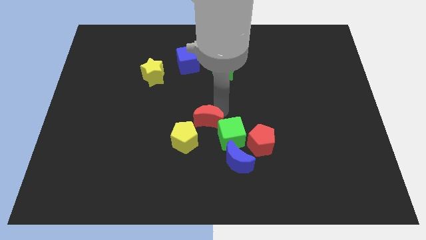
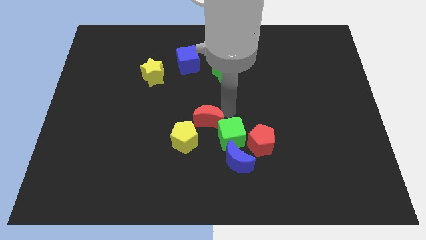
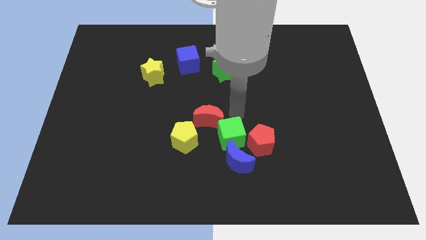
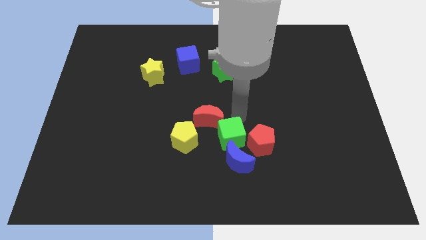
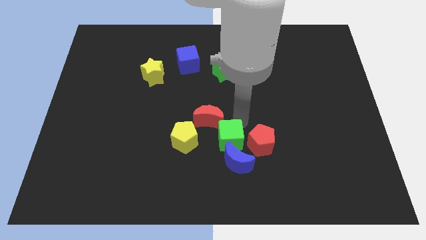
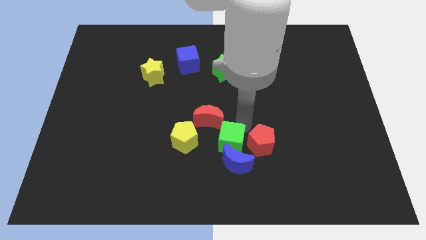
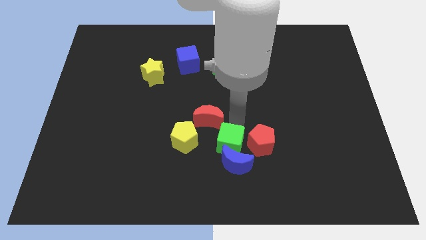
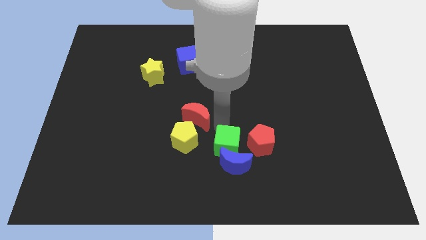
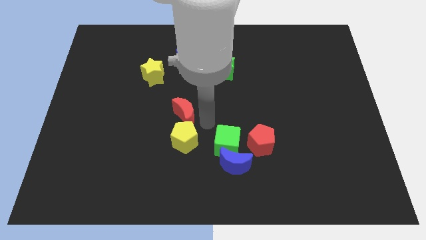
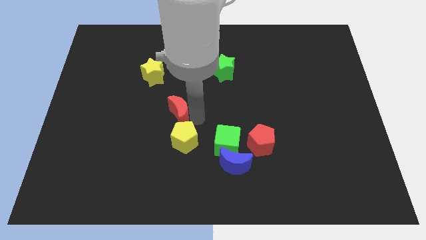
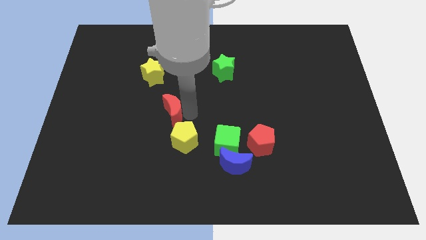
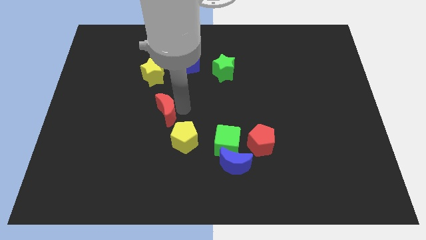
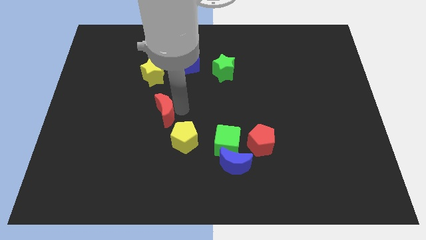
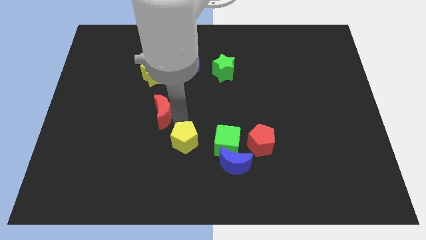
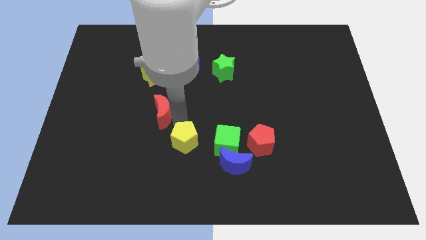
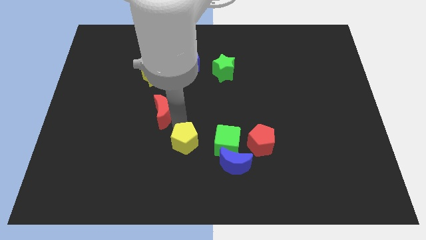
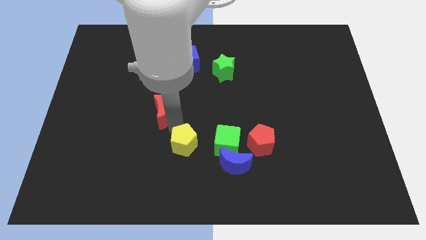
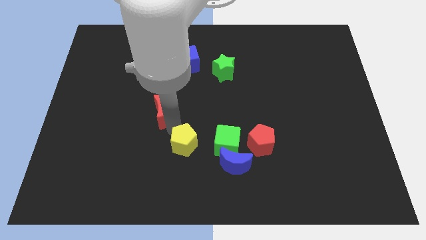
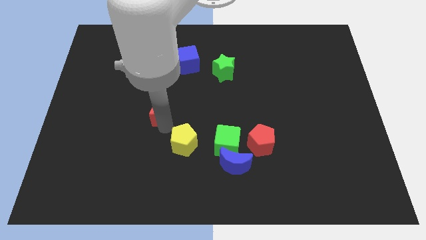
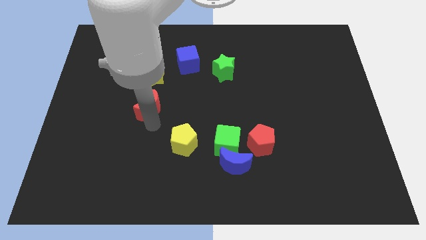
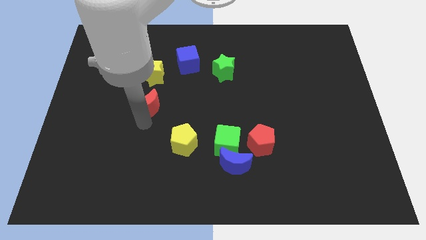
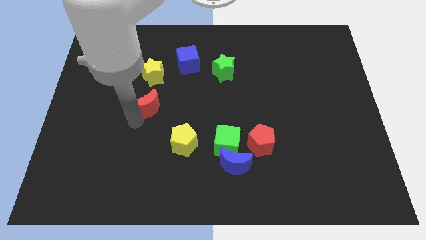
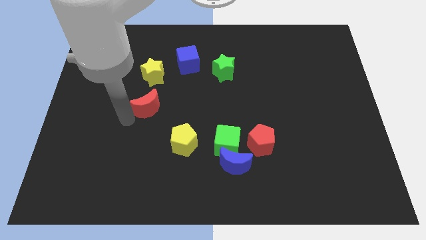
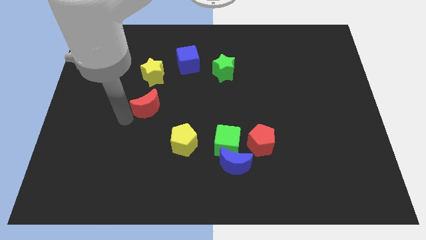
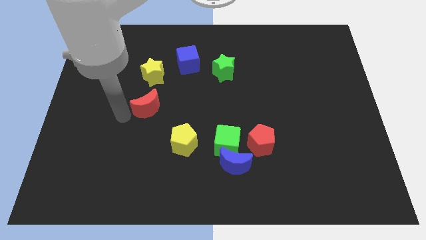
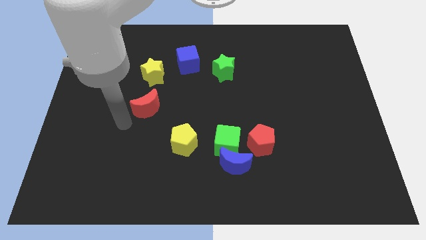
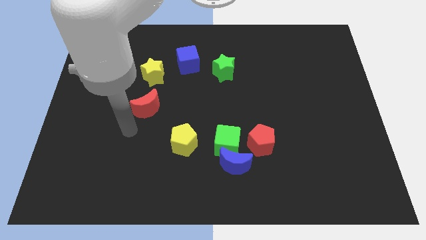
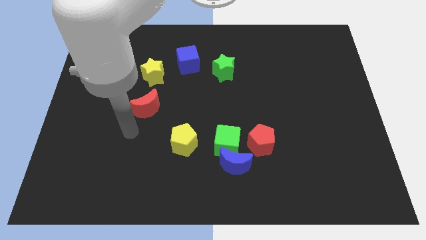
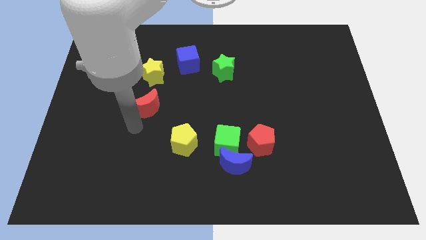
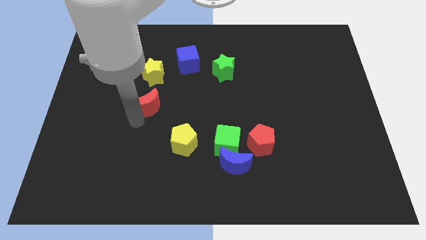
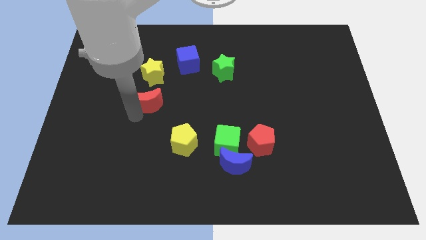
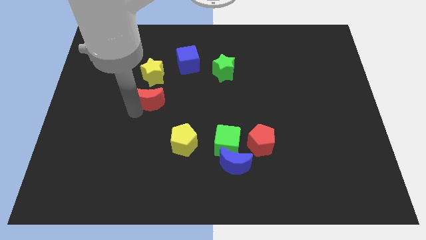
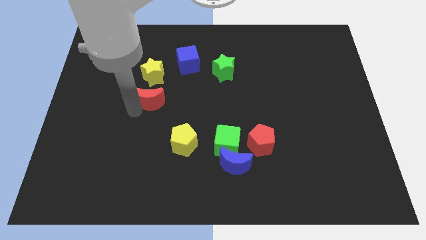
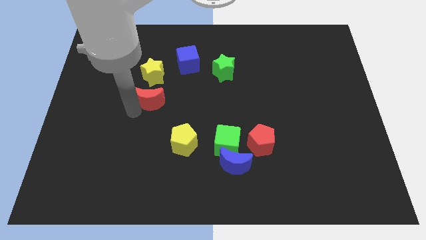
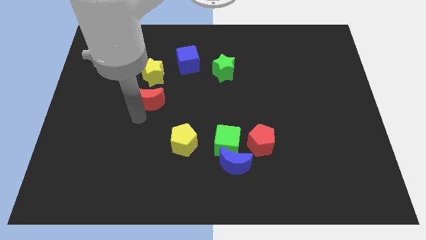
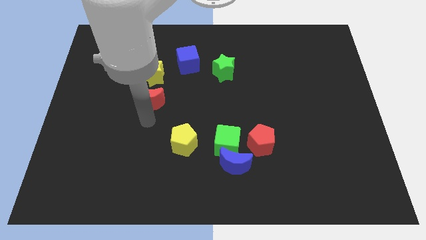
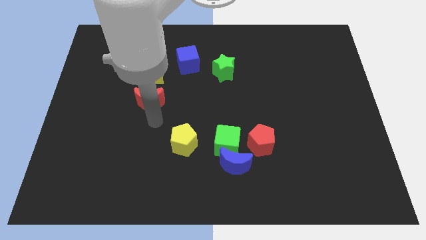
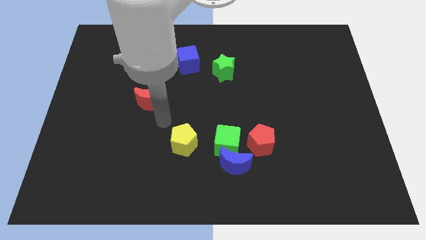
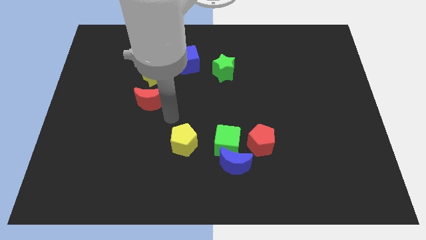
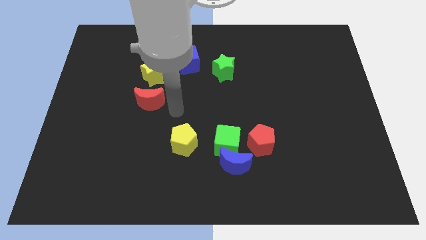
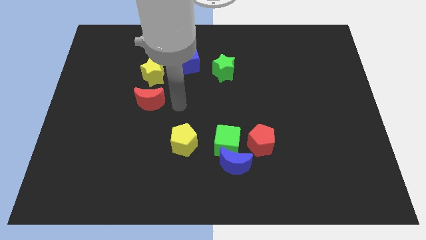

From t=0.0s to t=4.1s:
place the red moon towards bottom of yellow star

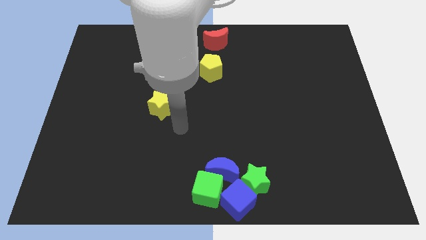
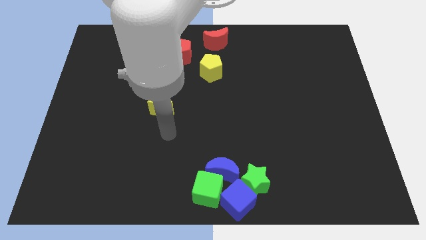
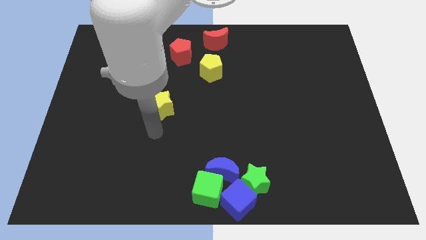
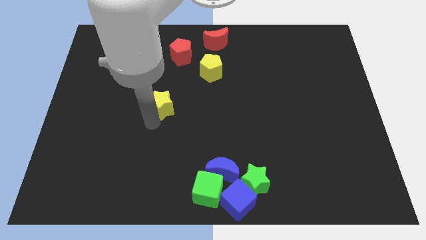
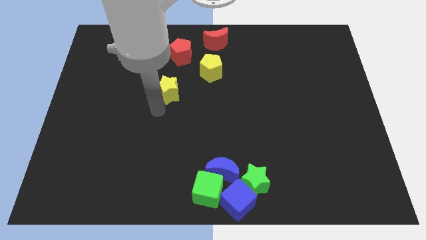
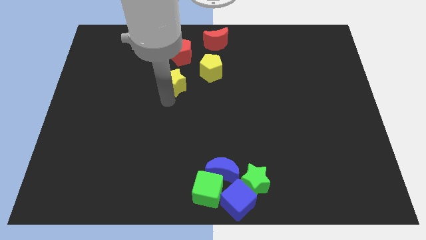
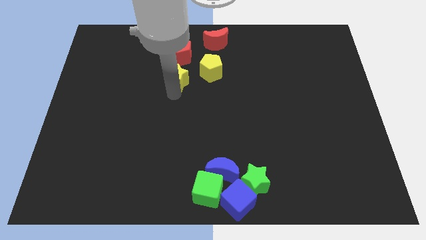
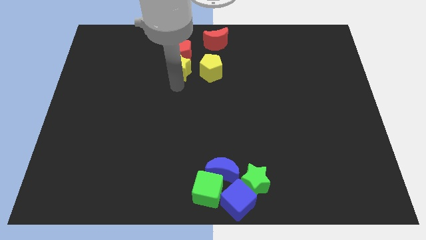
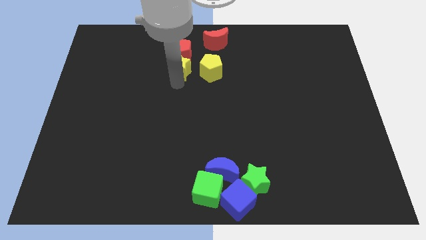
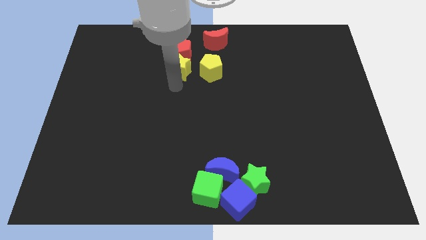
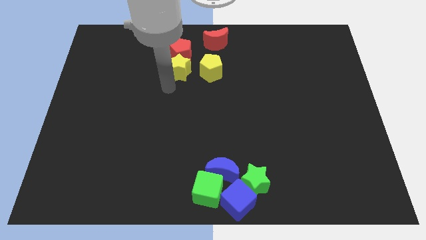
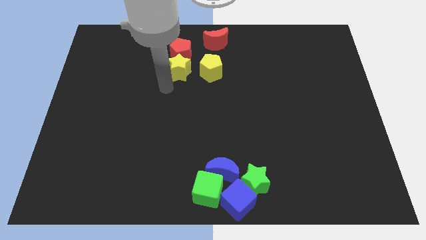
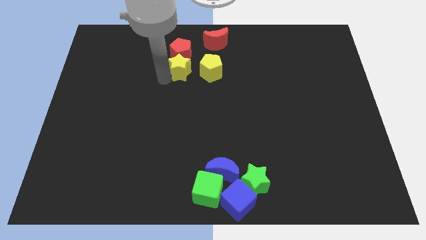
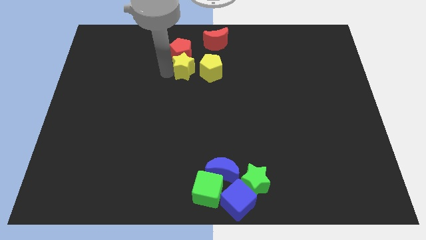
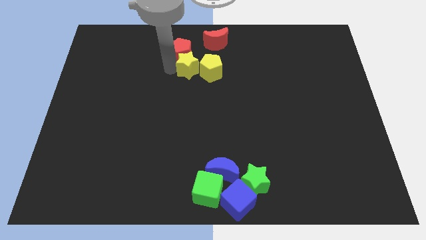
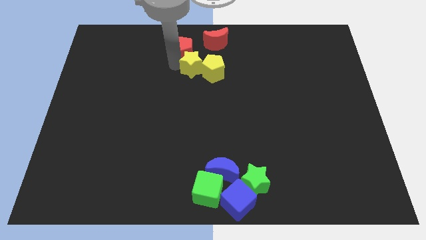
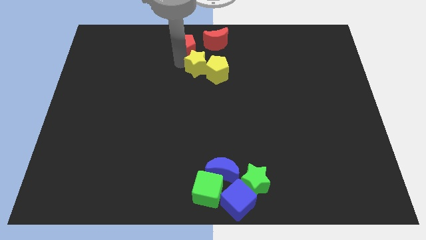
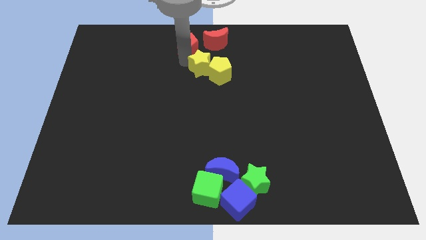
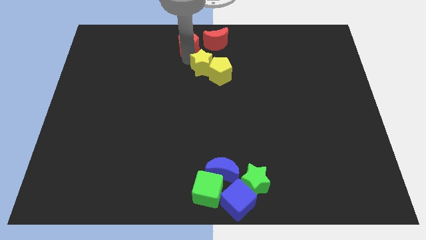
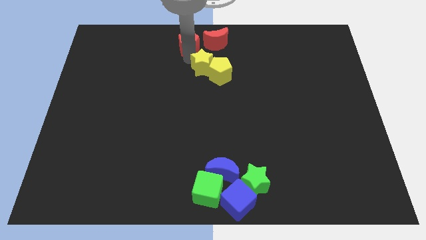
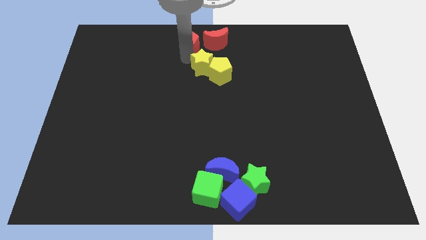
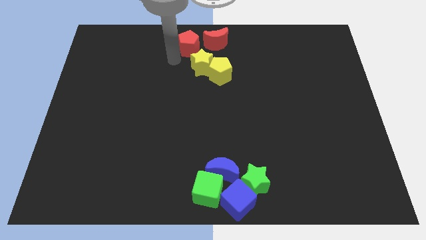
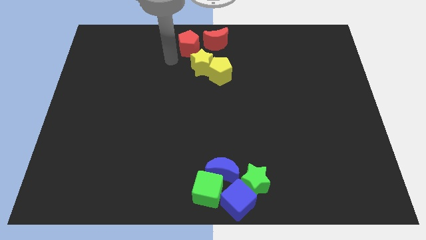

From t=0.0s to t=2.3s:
move the yellow pentagon diagonal to the red pentagon

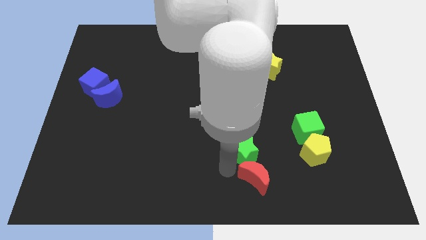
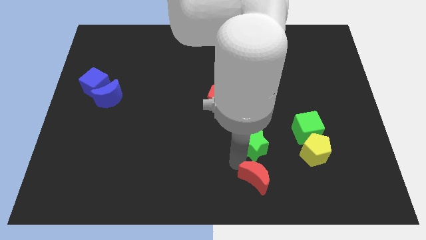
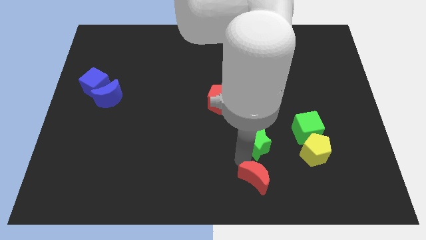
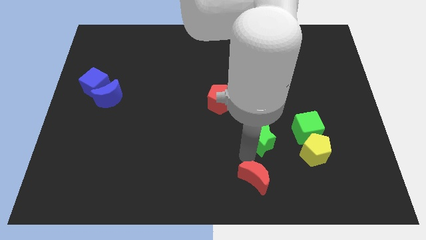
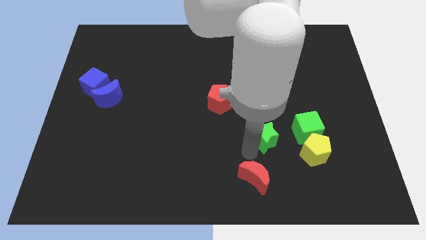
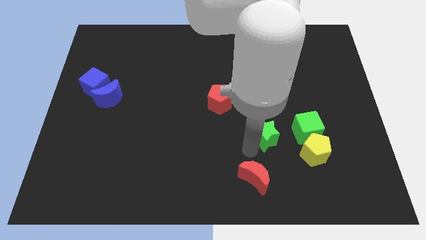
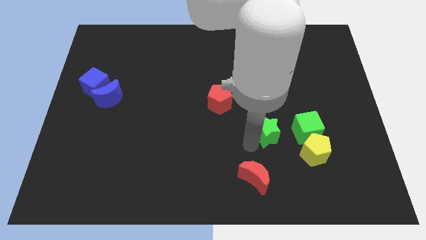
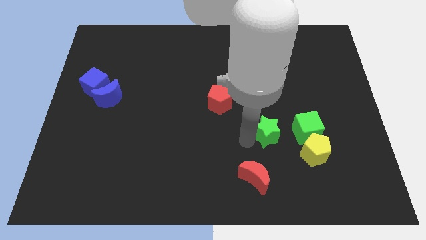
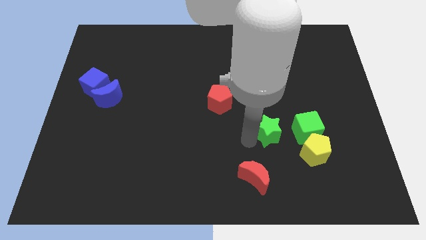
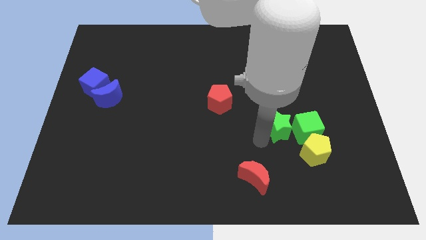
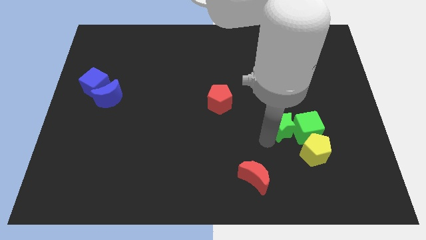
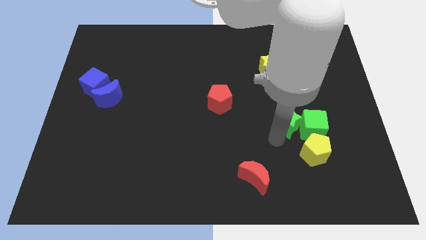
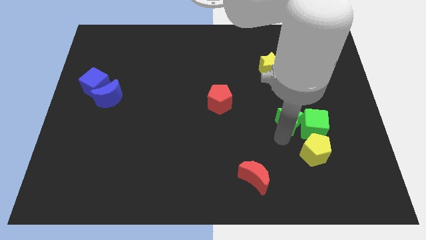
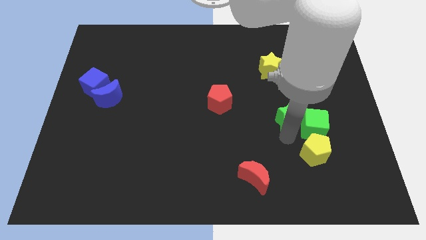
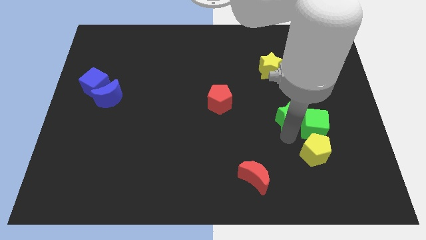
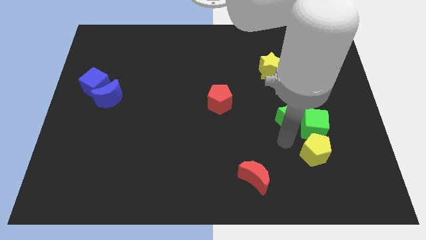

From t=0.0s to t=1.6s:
push the green star towards the green cube

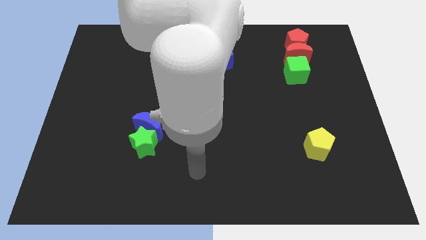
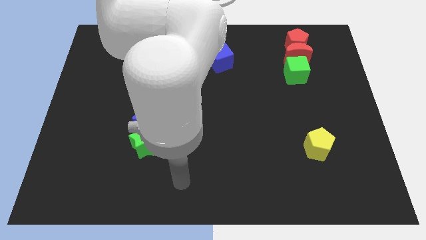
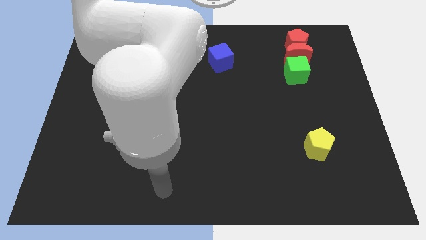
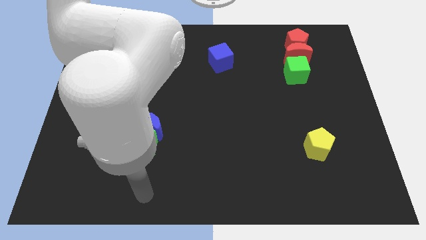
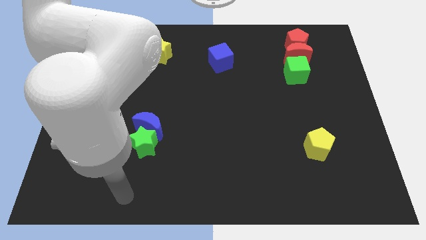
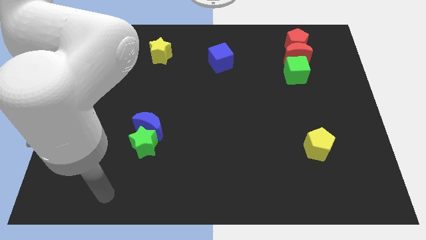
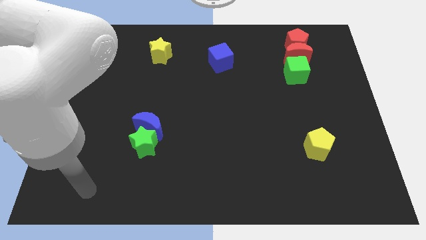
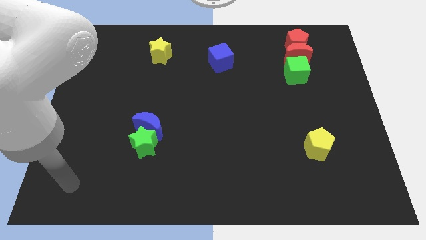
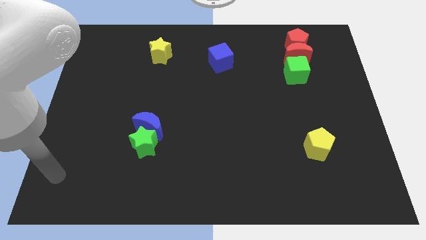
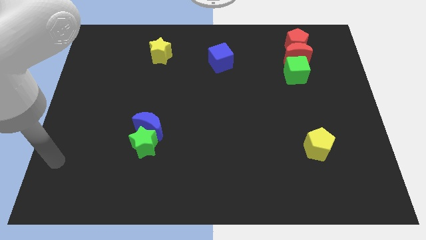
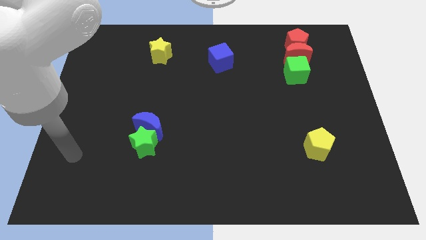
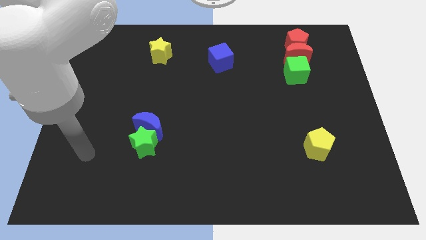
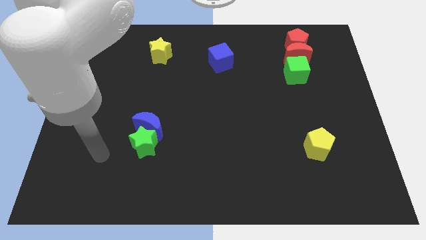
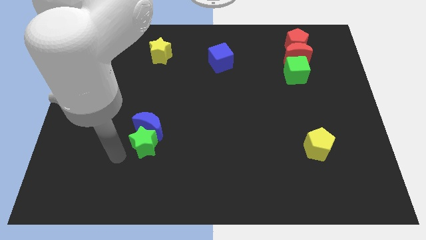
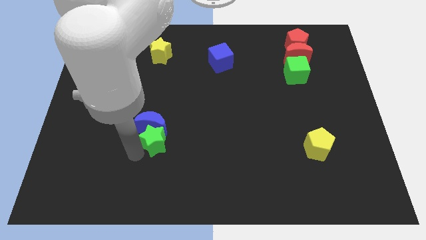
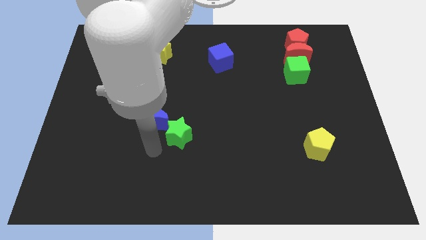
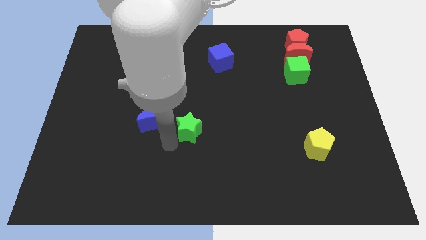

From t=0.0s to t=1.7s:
move green star slightly towards right
